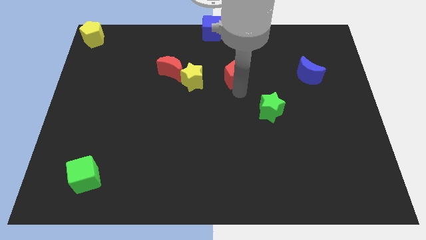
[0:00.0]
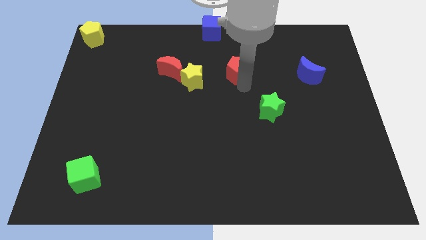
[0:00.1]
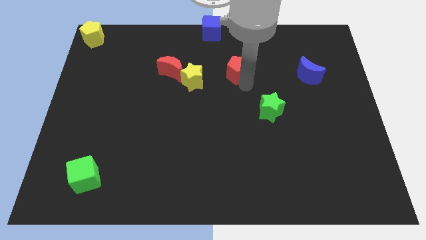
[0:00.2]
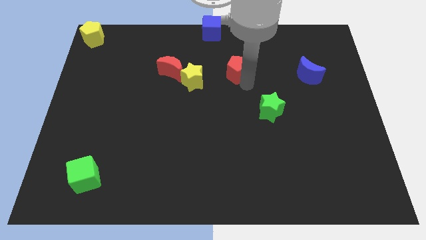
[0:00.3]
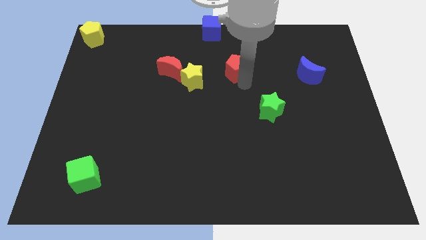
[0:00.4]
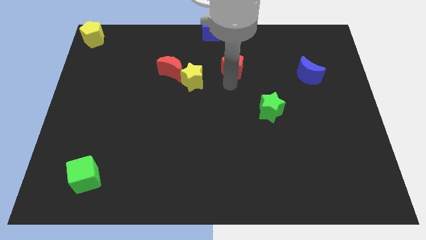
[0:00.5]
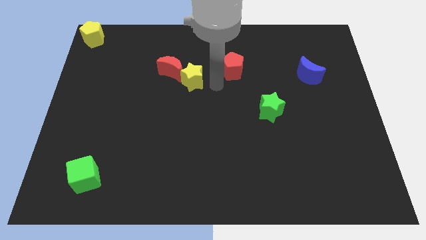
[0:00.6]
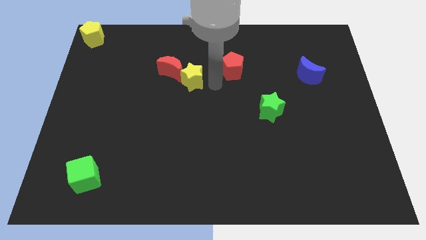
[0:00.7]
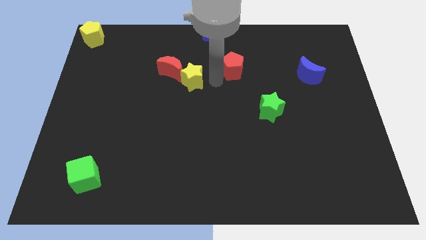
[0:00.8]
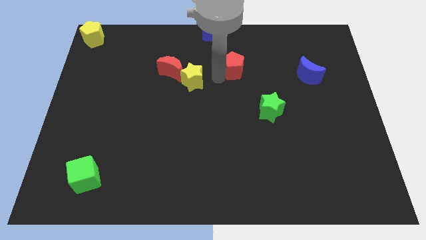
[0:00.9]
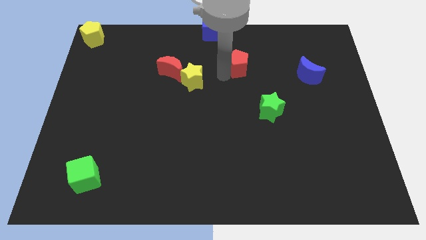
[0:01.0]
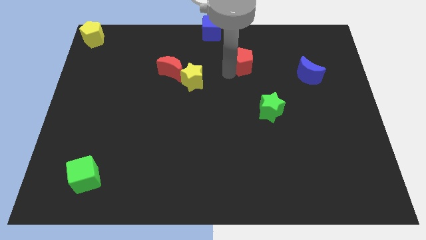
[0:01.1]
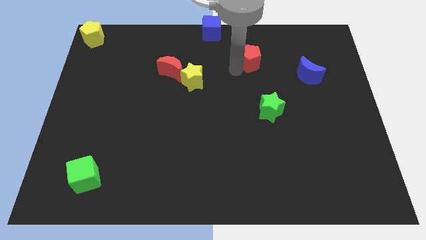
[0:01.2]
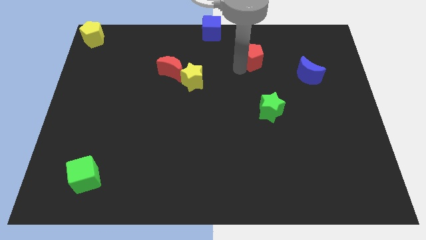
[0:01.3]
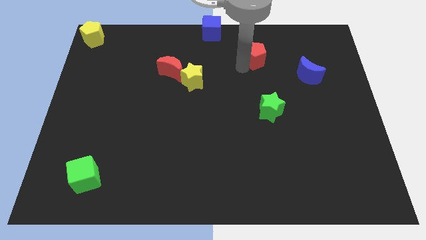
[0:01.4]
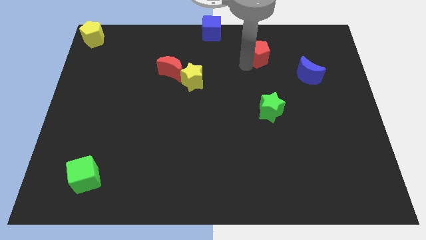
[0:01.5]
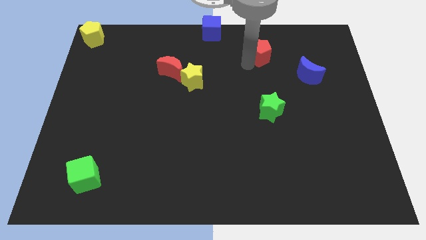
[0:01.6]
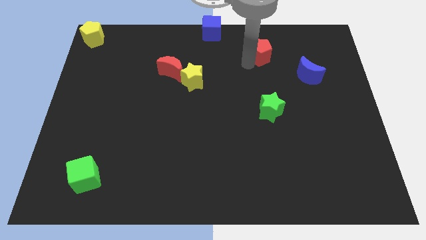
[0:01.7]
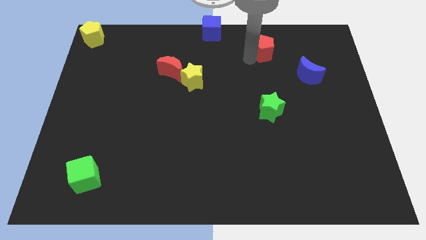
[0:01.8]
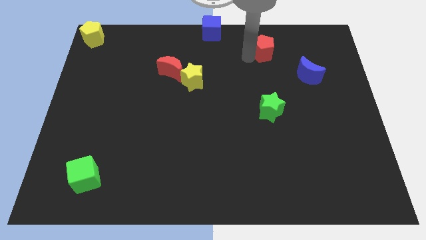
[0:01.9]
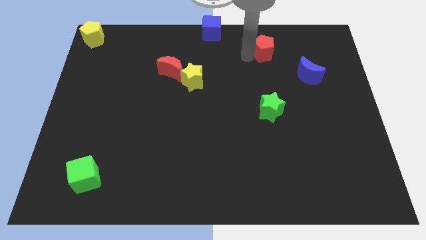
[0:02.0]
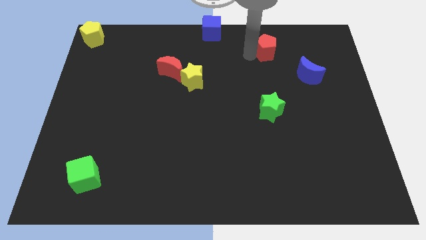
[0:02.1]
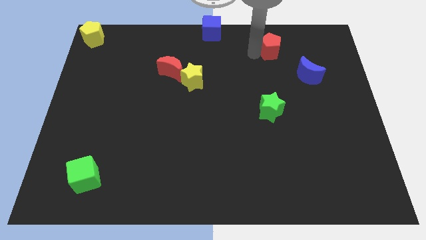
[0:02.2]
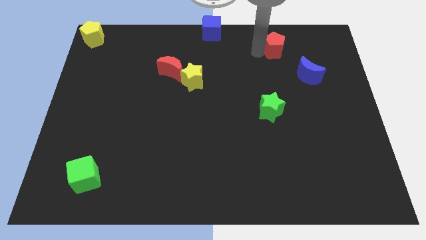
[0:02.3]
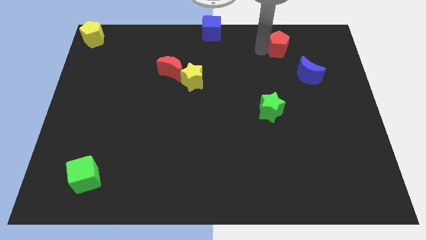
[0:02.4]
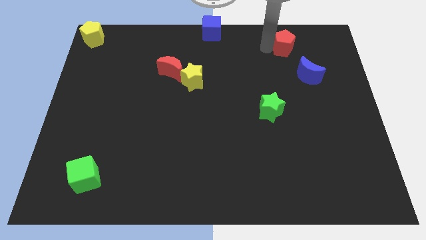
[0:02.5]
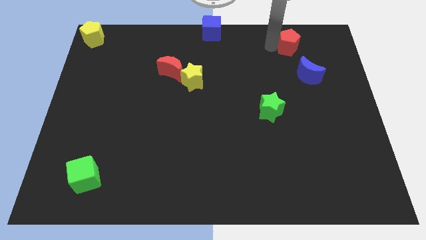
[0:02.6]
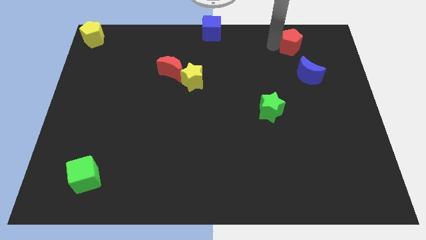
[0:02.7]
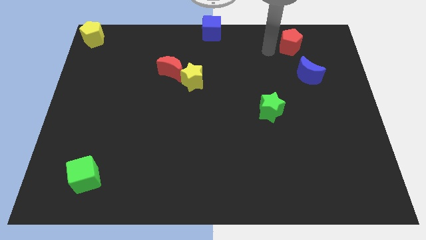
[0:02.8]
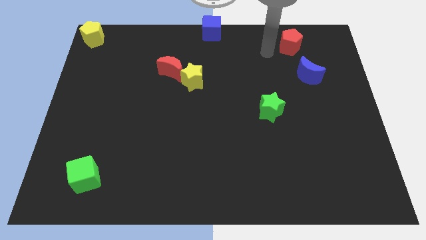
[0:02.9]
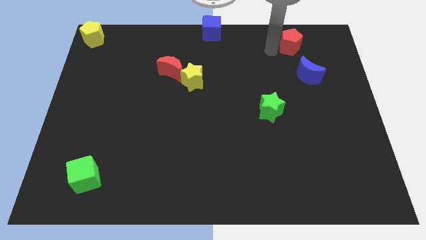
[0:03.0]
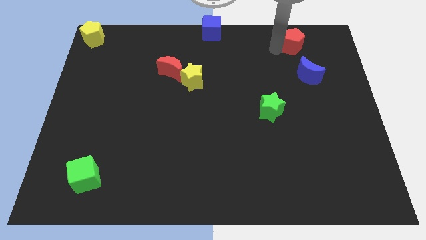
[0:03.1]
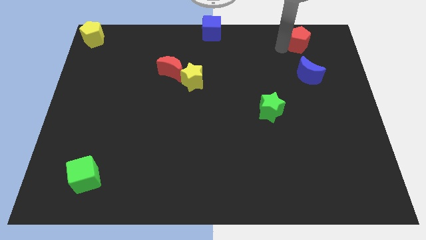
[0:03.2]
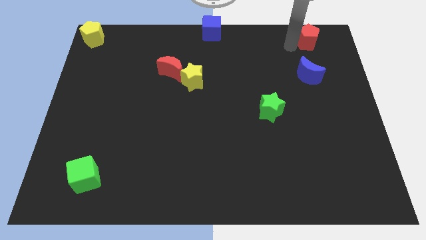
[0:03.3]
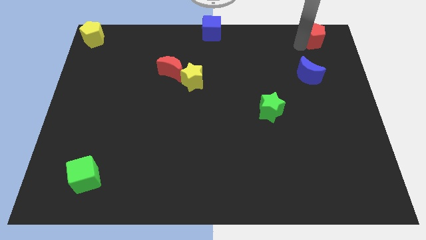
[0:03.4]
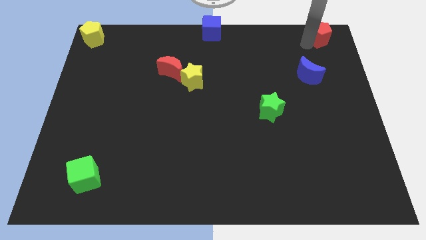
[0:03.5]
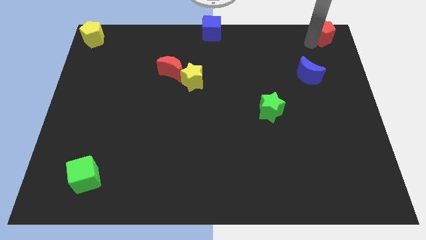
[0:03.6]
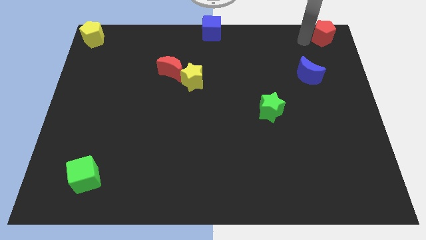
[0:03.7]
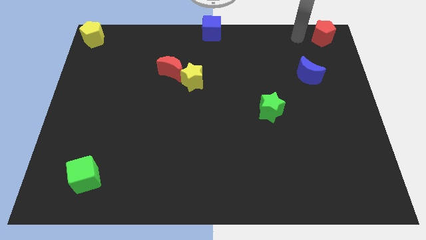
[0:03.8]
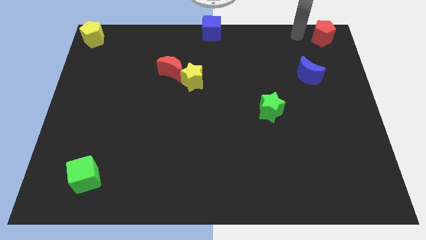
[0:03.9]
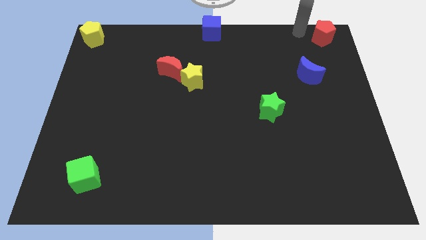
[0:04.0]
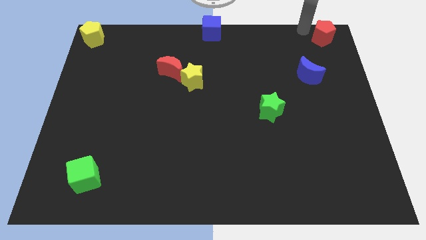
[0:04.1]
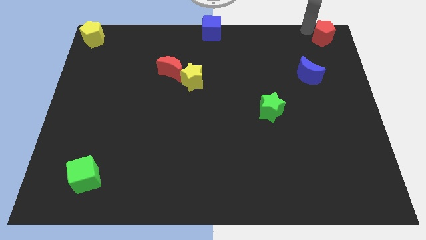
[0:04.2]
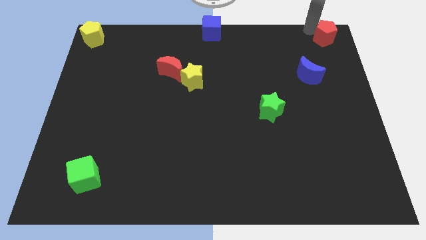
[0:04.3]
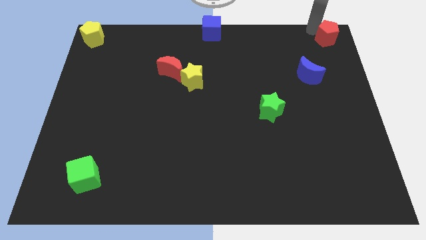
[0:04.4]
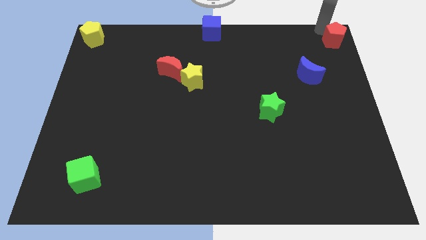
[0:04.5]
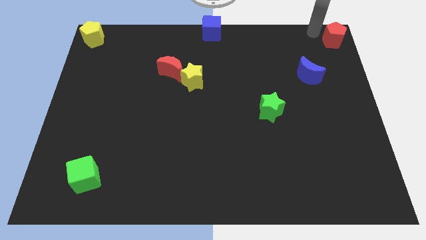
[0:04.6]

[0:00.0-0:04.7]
move the red pentagon to the top right of the board

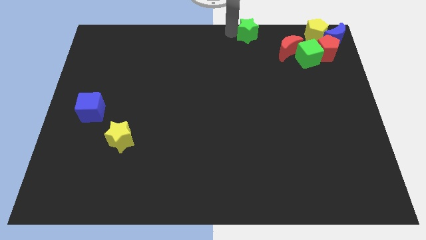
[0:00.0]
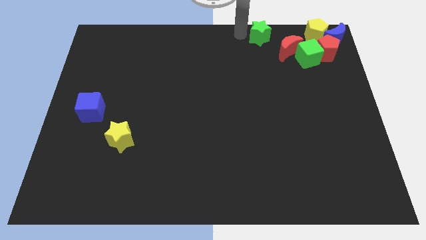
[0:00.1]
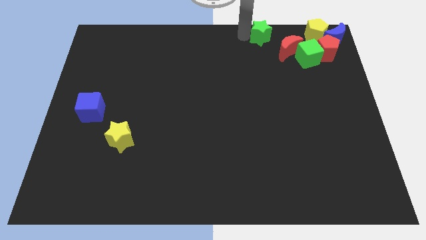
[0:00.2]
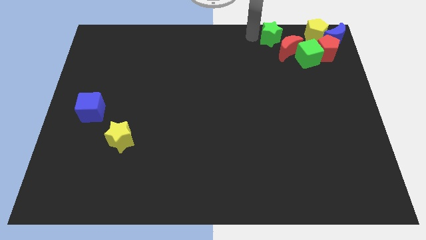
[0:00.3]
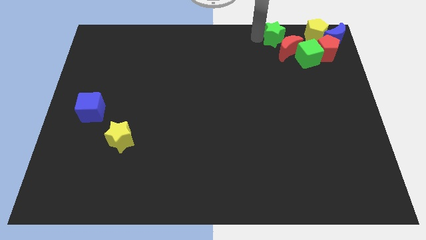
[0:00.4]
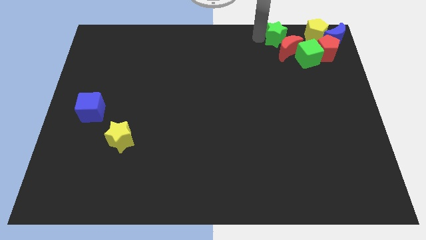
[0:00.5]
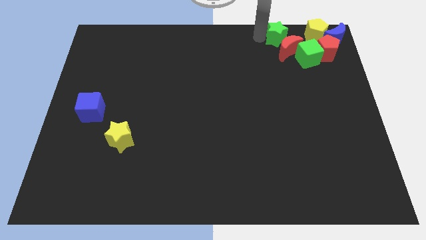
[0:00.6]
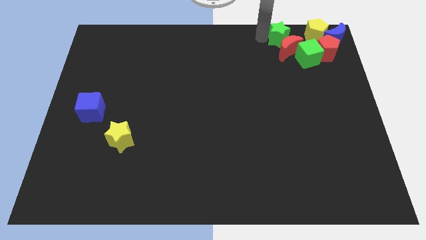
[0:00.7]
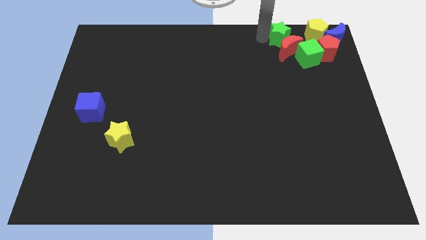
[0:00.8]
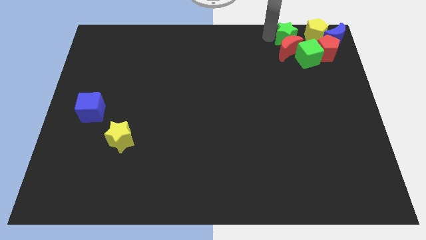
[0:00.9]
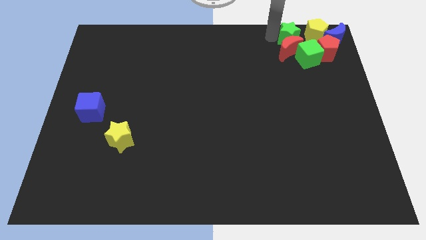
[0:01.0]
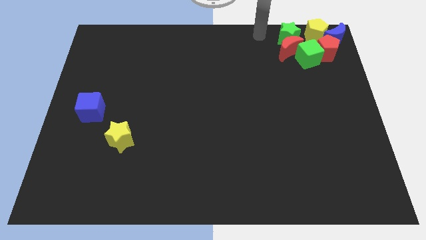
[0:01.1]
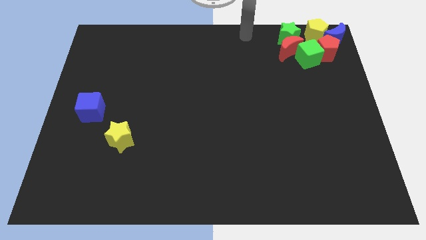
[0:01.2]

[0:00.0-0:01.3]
place the green star above the red moon

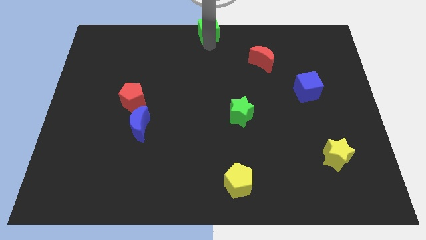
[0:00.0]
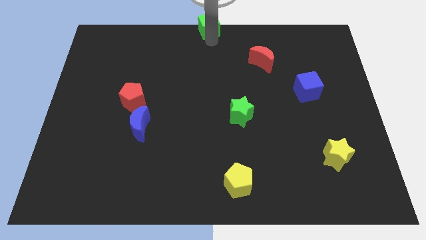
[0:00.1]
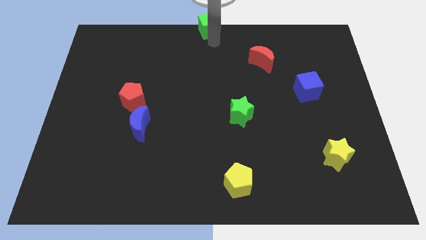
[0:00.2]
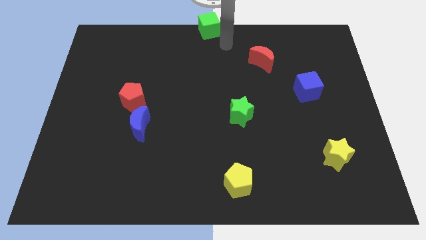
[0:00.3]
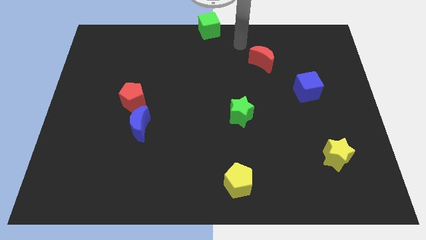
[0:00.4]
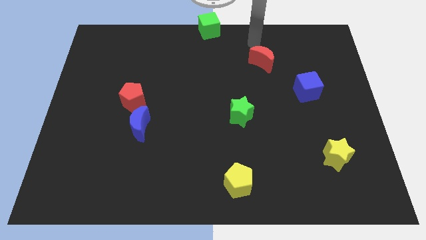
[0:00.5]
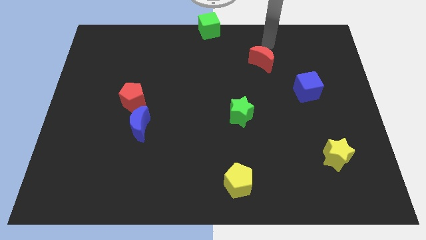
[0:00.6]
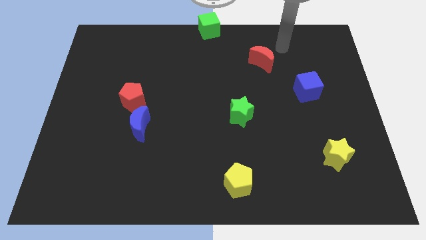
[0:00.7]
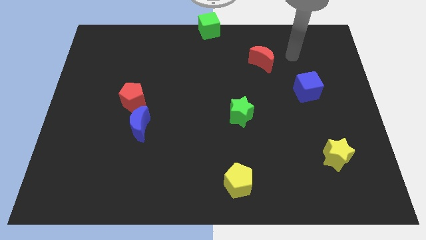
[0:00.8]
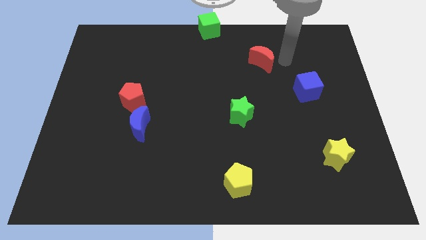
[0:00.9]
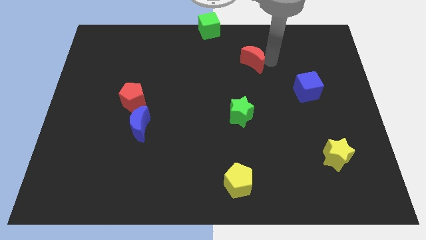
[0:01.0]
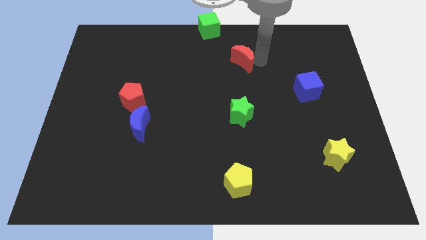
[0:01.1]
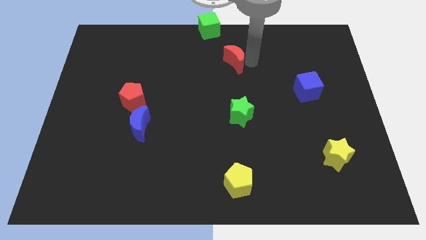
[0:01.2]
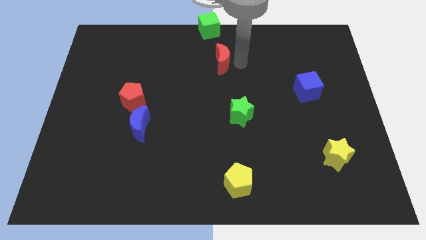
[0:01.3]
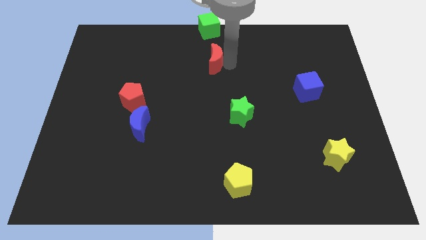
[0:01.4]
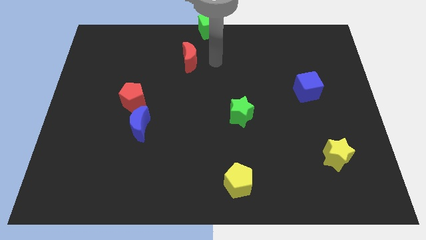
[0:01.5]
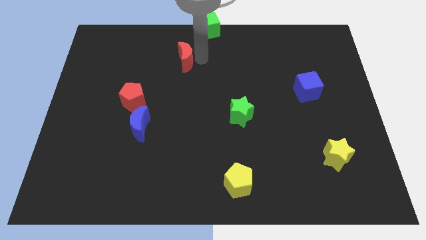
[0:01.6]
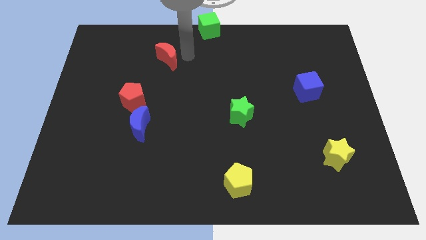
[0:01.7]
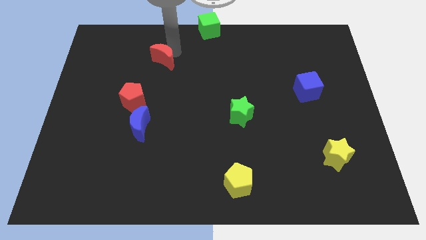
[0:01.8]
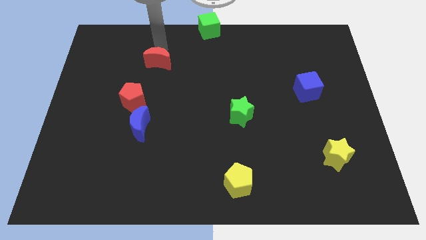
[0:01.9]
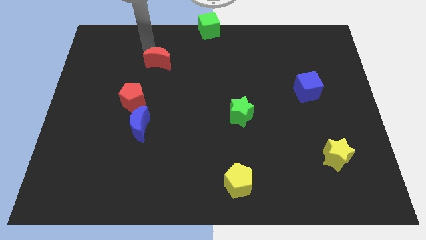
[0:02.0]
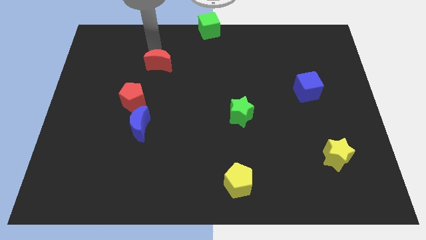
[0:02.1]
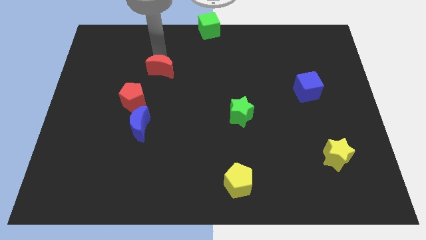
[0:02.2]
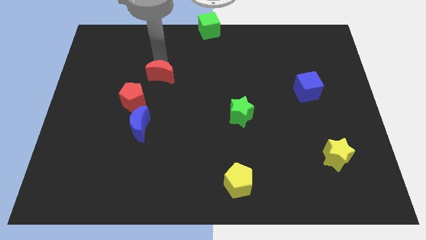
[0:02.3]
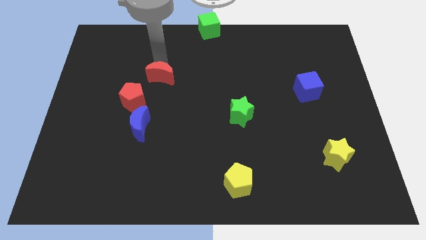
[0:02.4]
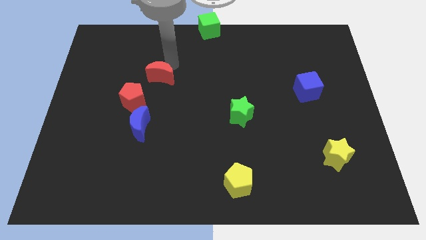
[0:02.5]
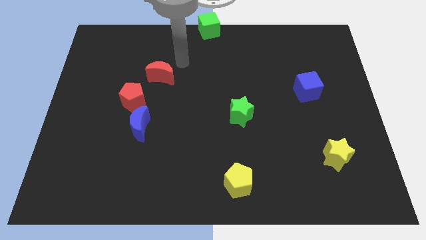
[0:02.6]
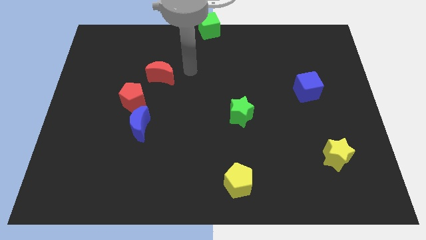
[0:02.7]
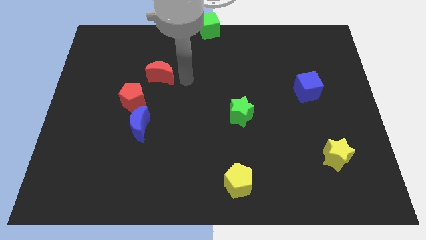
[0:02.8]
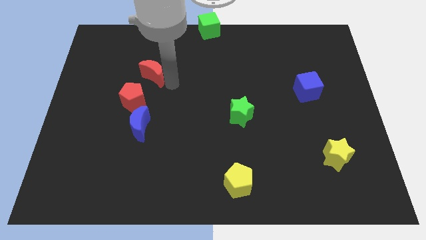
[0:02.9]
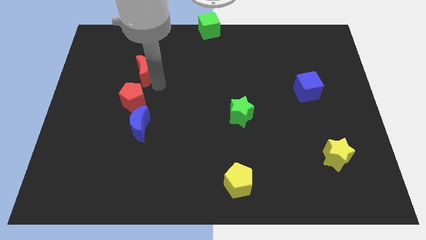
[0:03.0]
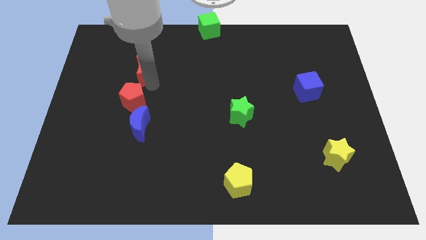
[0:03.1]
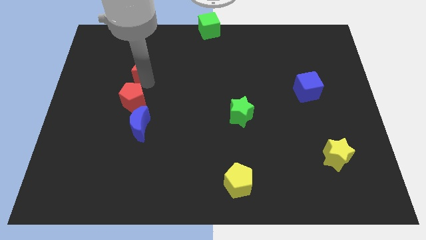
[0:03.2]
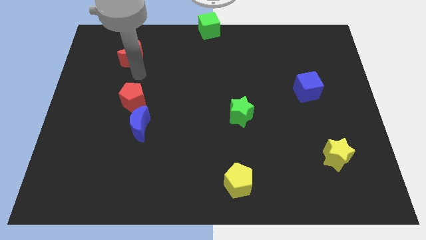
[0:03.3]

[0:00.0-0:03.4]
move the red crescent vertically to the top of the red pentagon
